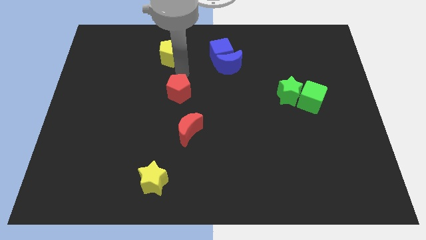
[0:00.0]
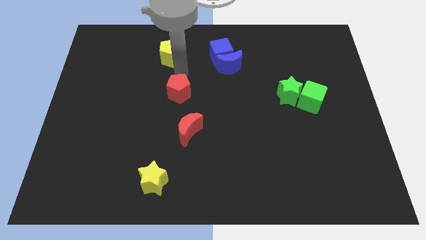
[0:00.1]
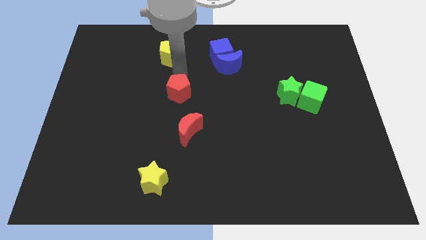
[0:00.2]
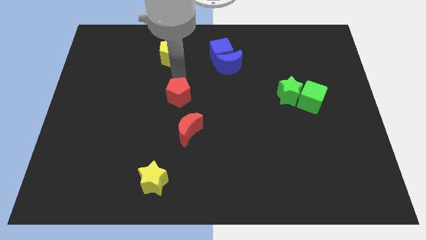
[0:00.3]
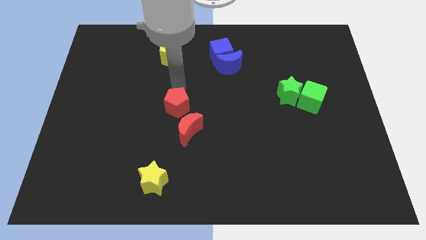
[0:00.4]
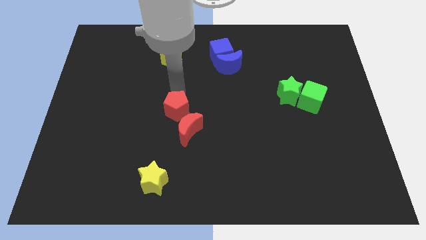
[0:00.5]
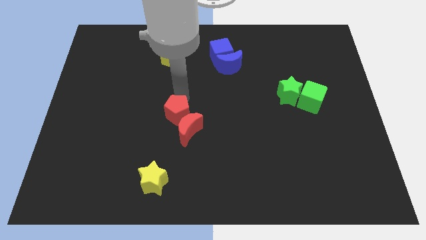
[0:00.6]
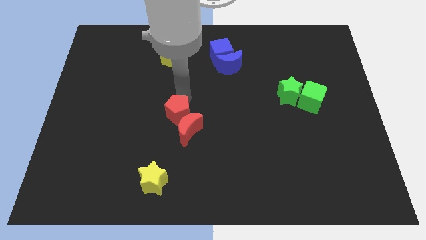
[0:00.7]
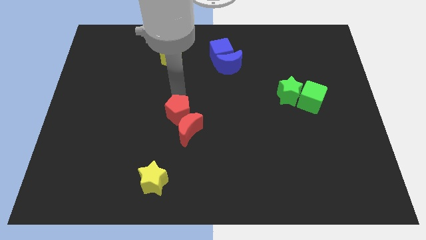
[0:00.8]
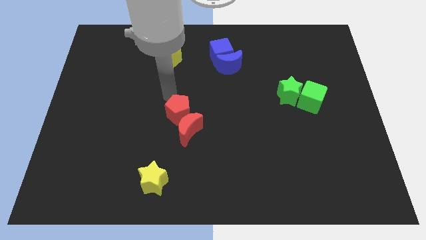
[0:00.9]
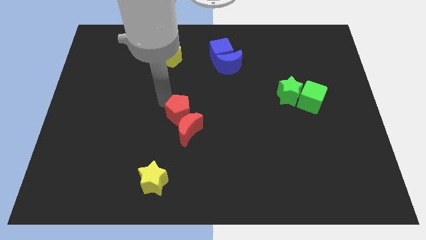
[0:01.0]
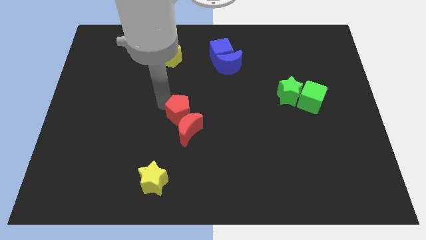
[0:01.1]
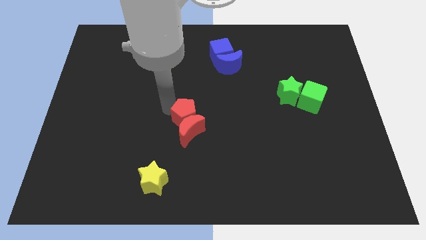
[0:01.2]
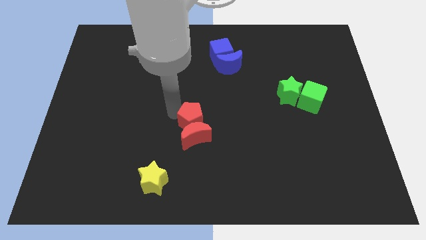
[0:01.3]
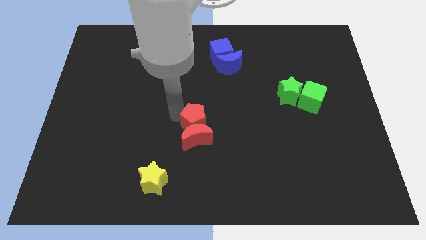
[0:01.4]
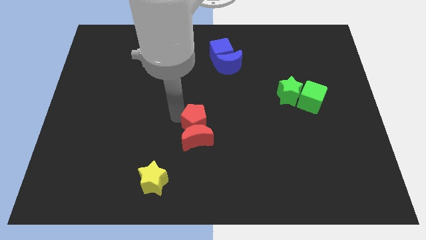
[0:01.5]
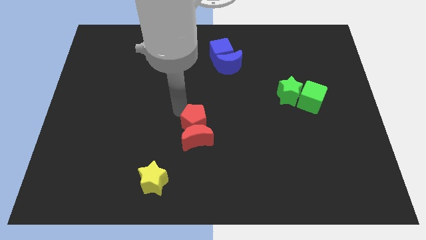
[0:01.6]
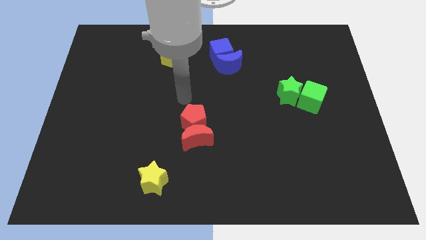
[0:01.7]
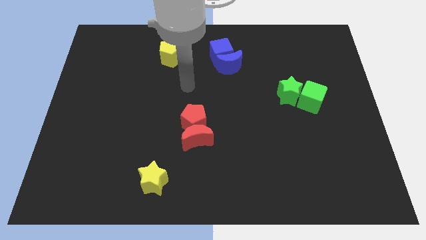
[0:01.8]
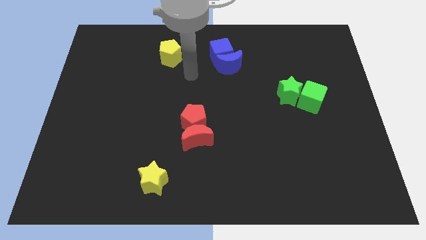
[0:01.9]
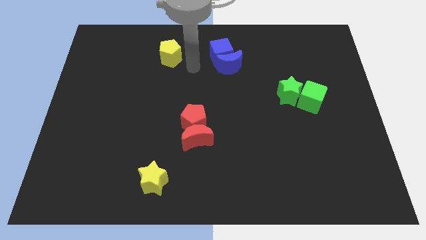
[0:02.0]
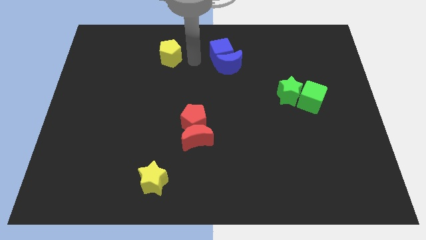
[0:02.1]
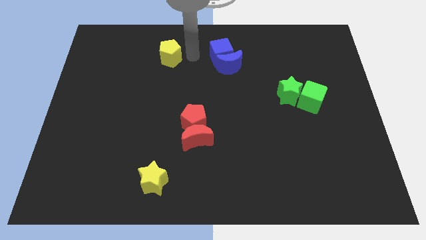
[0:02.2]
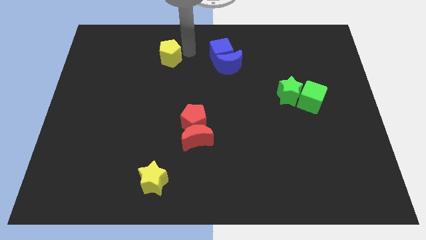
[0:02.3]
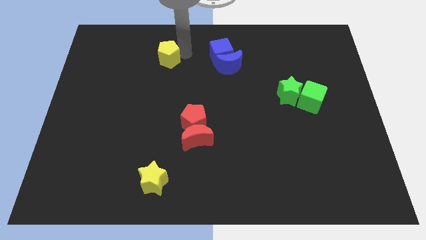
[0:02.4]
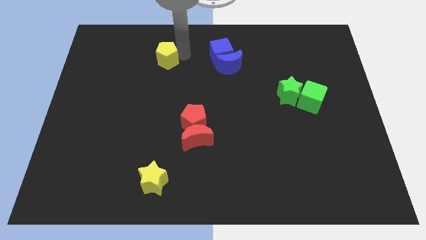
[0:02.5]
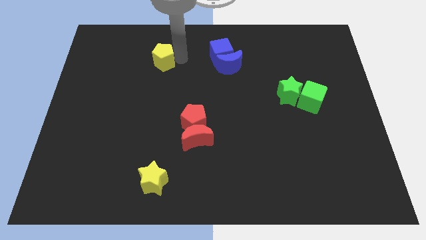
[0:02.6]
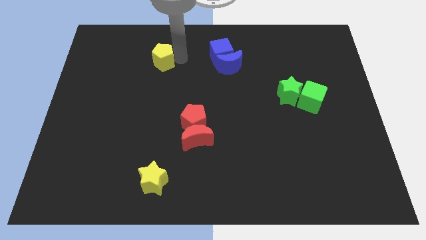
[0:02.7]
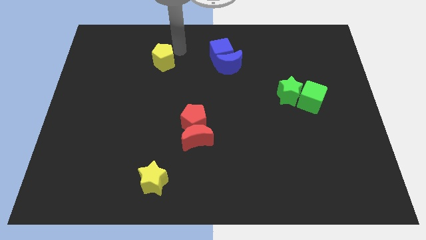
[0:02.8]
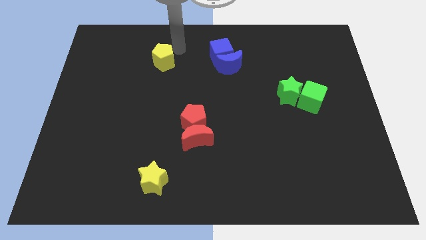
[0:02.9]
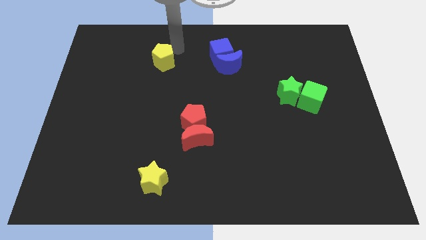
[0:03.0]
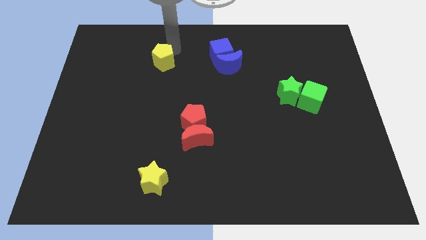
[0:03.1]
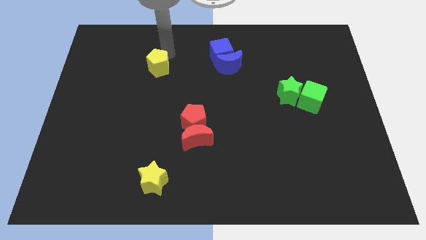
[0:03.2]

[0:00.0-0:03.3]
move your arm towards the yellow pentagon

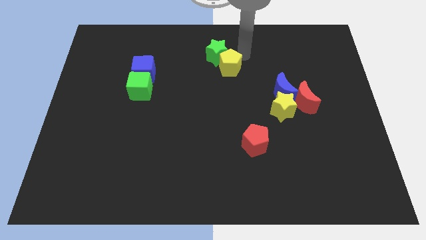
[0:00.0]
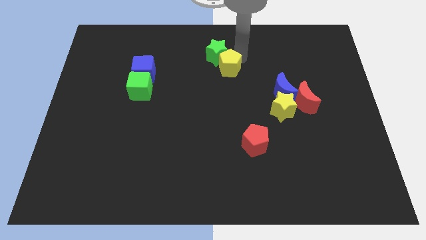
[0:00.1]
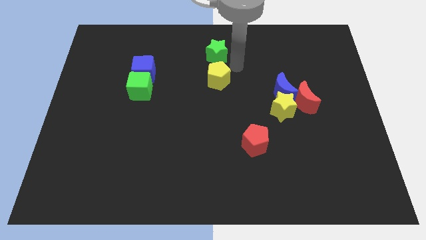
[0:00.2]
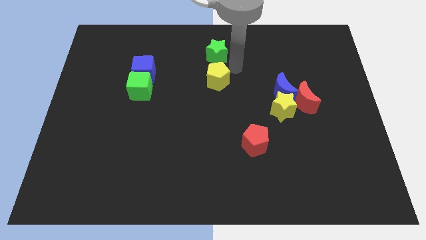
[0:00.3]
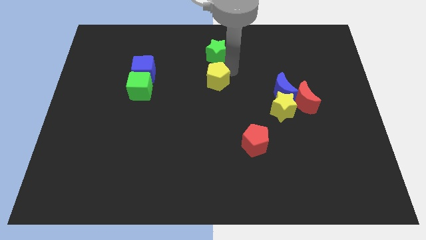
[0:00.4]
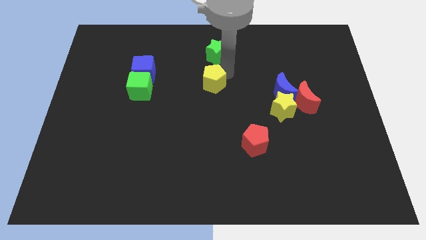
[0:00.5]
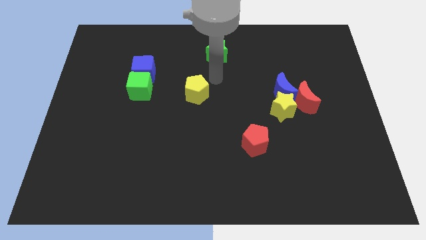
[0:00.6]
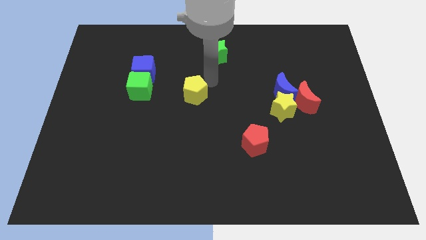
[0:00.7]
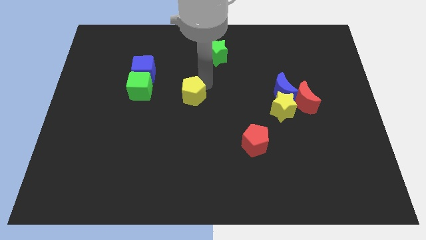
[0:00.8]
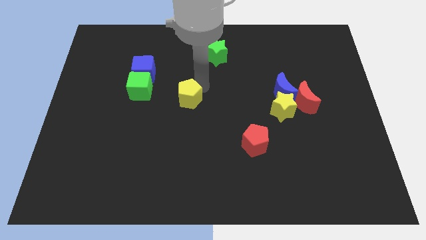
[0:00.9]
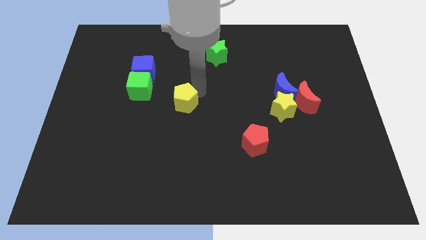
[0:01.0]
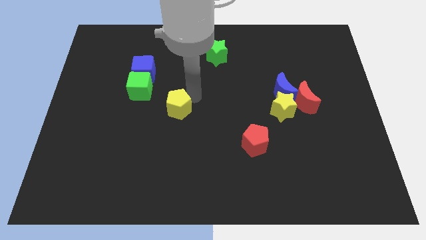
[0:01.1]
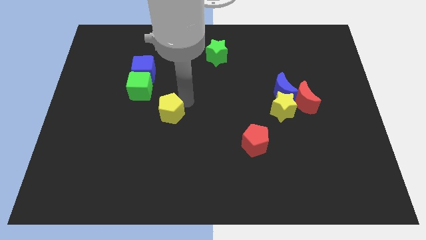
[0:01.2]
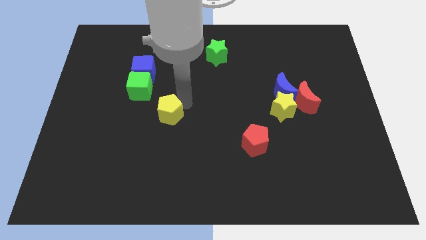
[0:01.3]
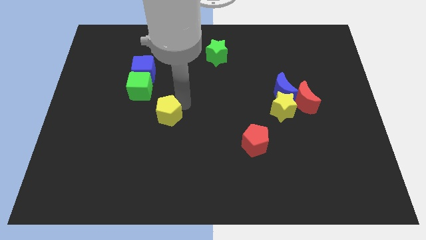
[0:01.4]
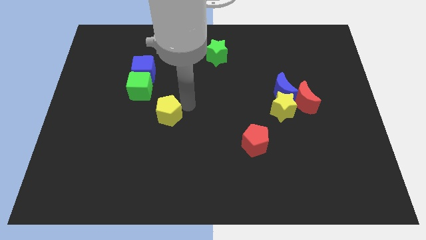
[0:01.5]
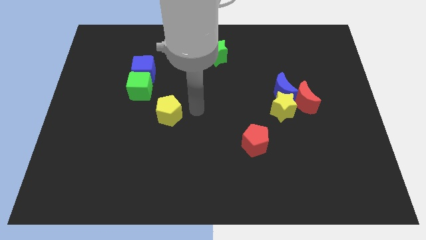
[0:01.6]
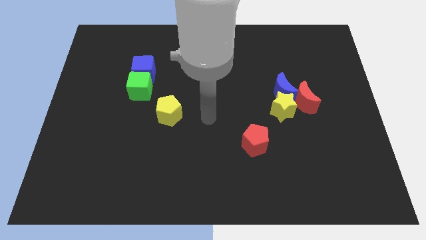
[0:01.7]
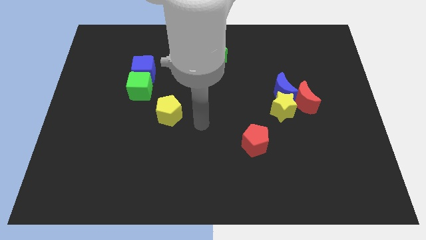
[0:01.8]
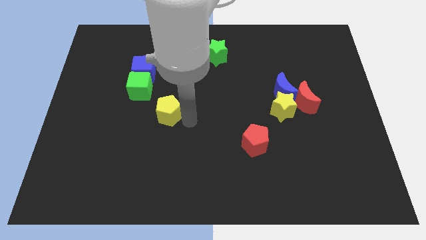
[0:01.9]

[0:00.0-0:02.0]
push the yellow pentagon towards the down of the board

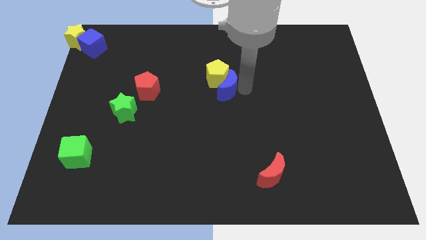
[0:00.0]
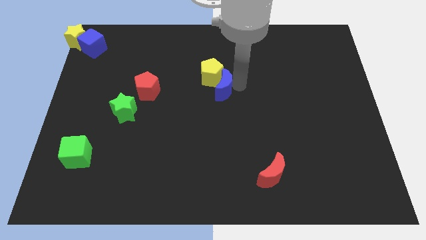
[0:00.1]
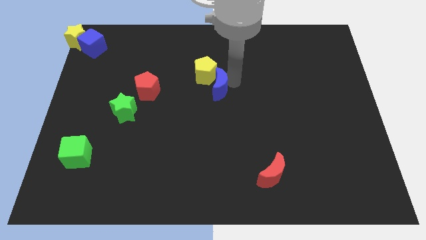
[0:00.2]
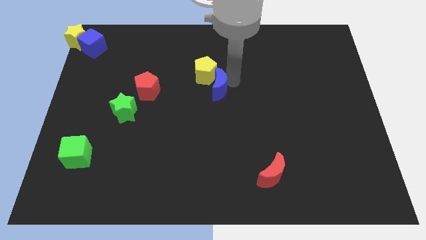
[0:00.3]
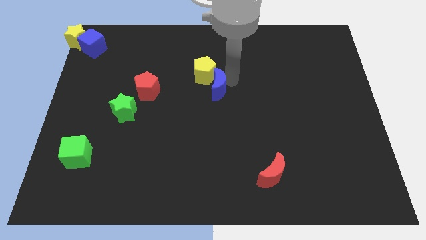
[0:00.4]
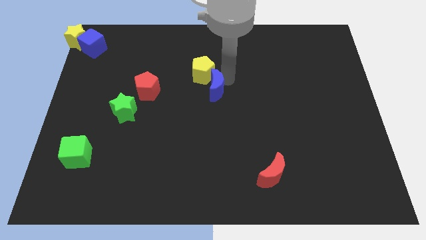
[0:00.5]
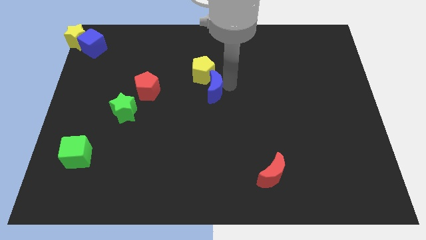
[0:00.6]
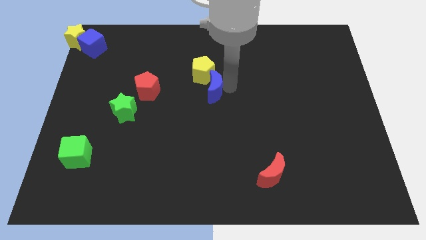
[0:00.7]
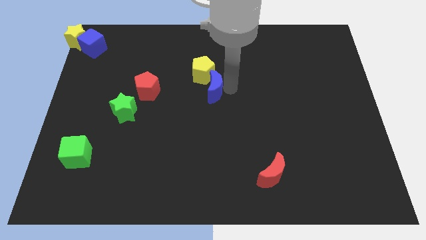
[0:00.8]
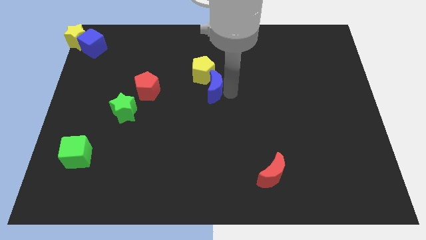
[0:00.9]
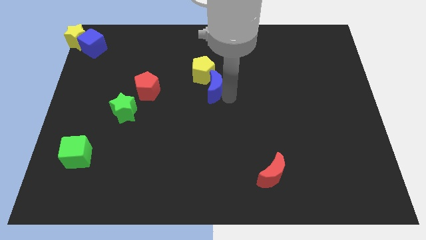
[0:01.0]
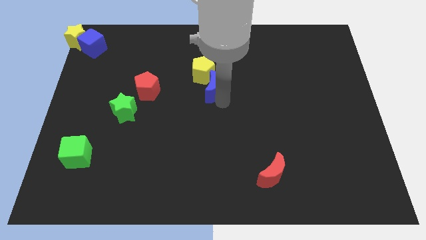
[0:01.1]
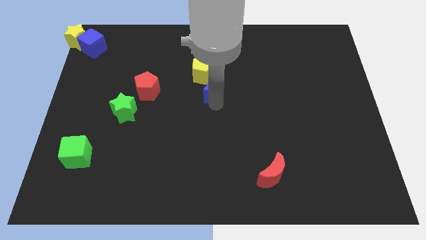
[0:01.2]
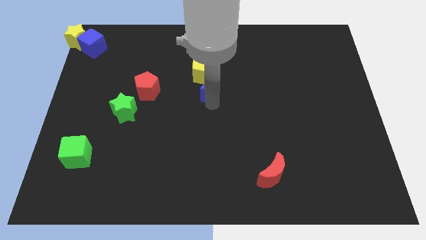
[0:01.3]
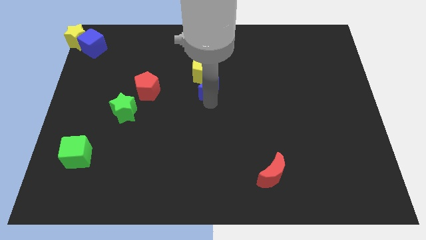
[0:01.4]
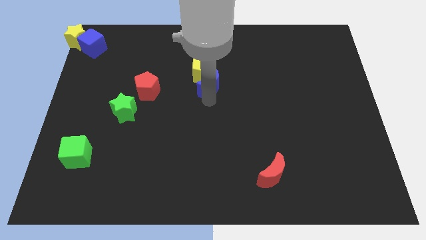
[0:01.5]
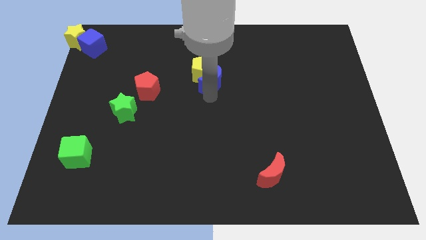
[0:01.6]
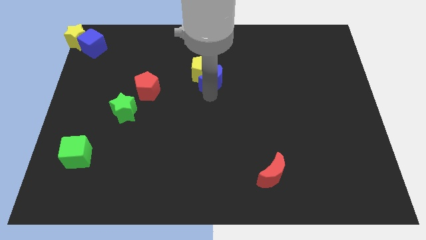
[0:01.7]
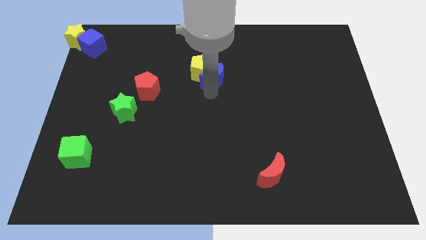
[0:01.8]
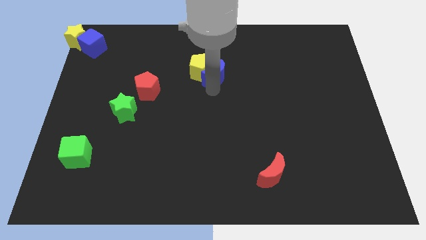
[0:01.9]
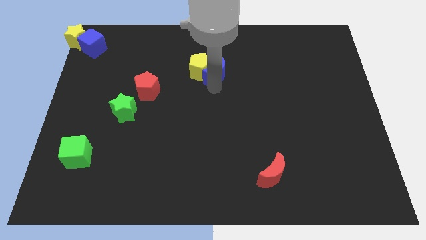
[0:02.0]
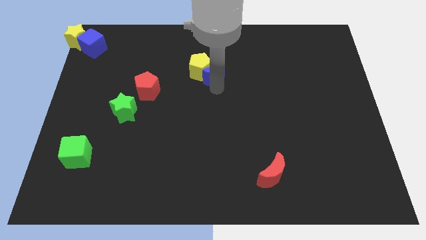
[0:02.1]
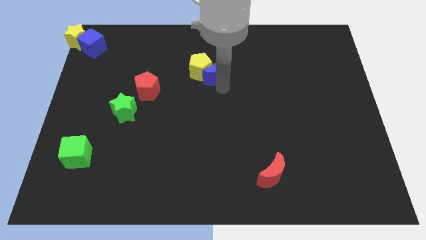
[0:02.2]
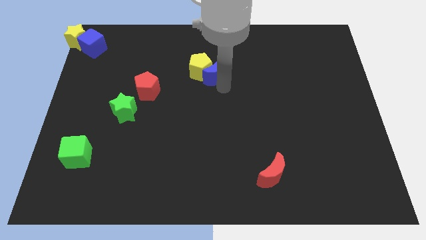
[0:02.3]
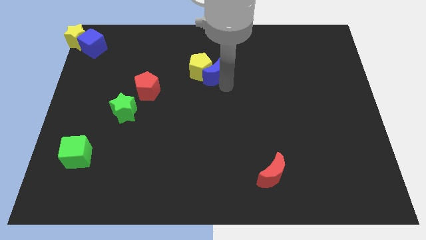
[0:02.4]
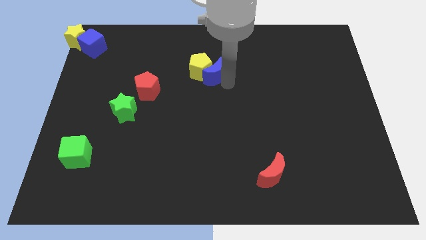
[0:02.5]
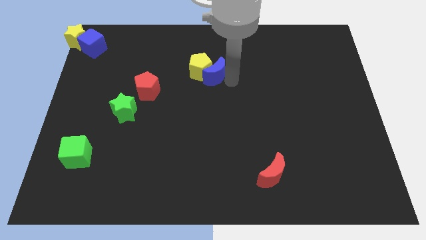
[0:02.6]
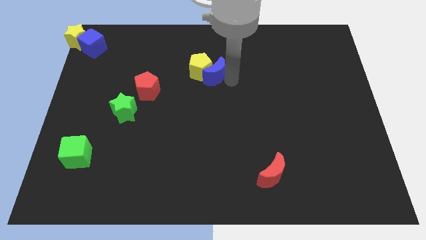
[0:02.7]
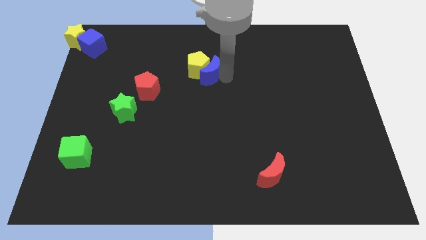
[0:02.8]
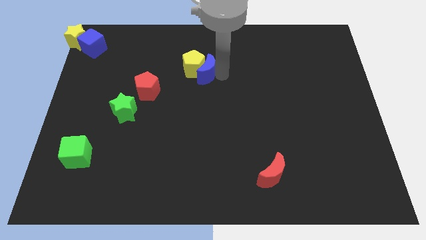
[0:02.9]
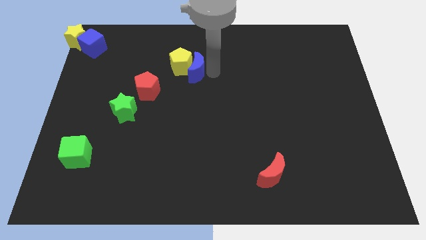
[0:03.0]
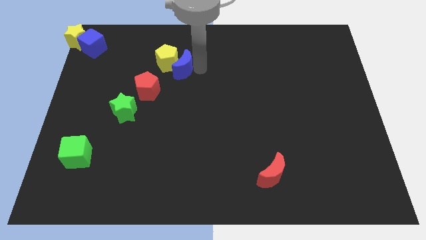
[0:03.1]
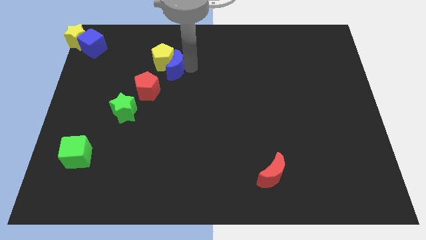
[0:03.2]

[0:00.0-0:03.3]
move the blue crescent along with the yellow pentagon to the top right of the red pentagon

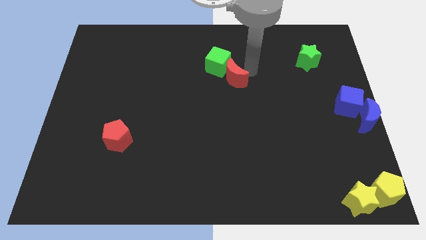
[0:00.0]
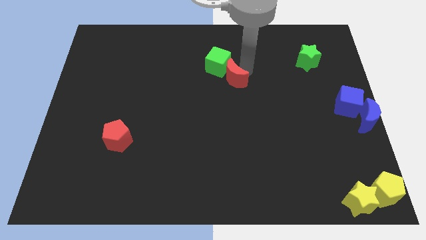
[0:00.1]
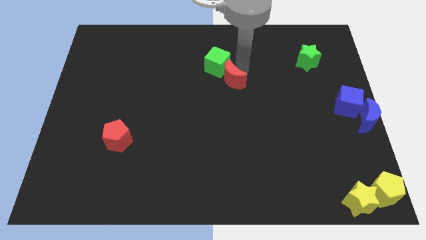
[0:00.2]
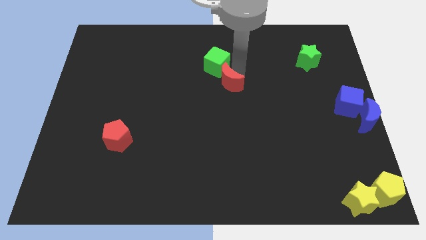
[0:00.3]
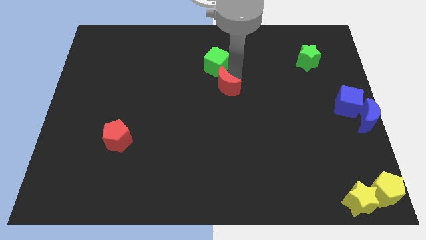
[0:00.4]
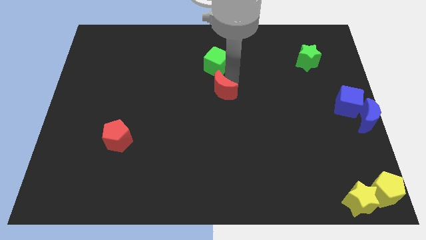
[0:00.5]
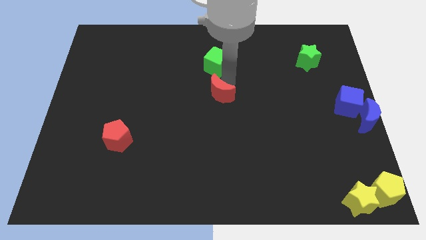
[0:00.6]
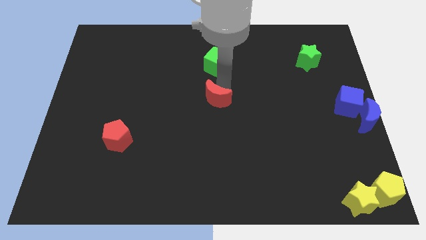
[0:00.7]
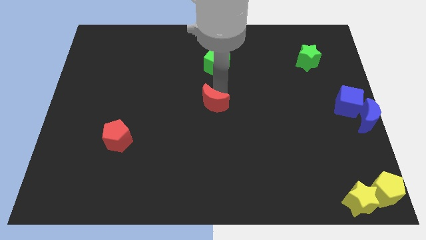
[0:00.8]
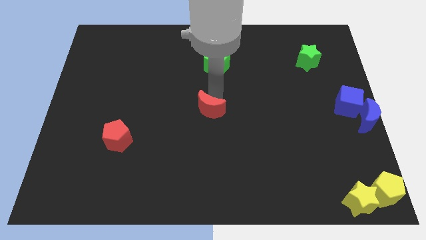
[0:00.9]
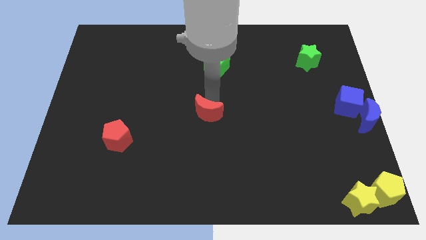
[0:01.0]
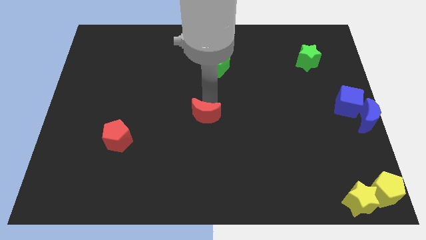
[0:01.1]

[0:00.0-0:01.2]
separate the red moon from the green cube
